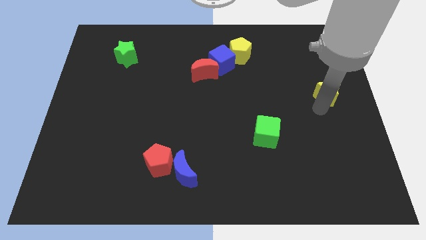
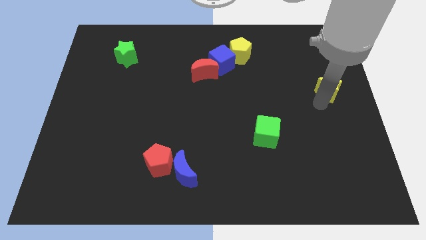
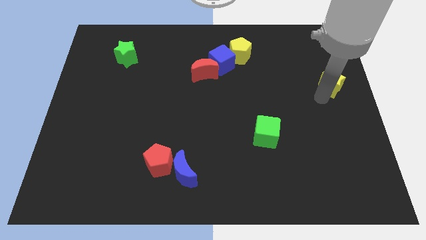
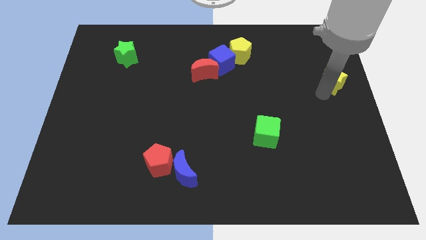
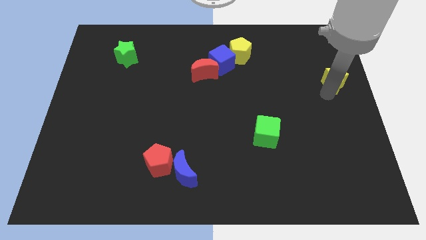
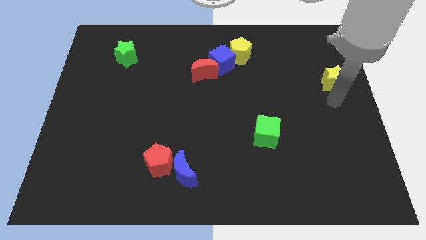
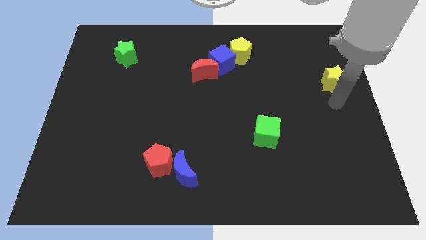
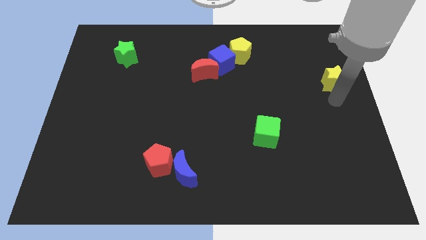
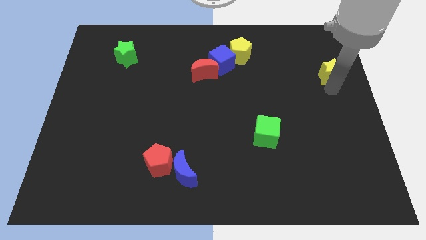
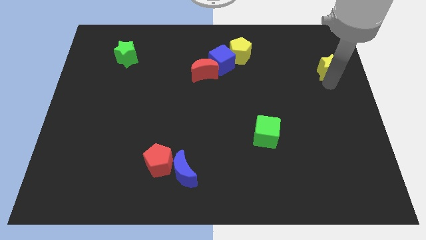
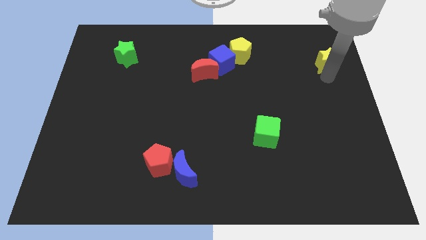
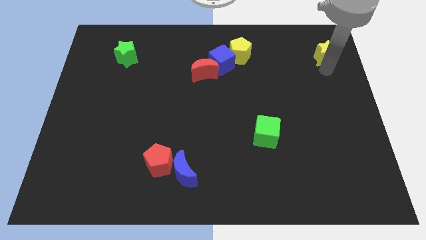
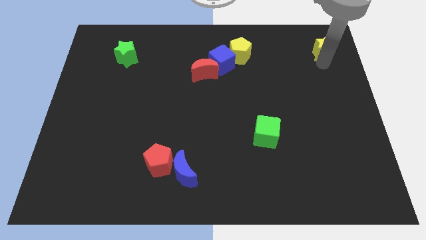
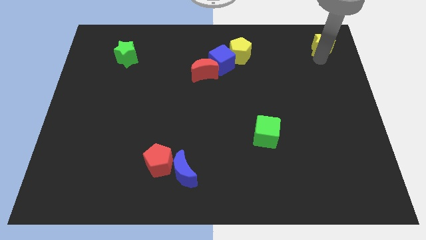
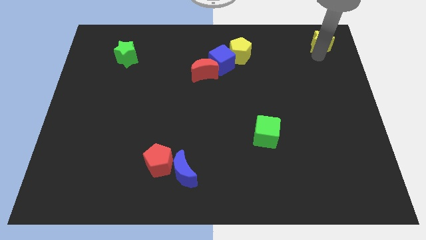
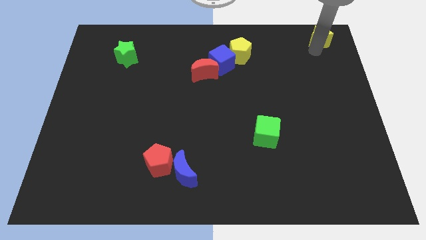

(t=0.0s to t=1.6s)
move the yellow star to the top right side

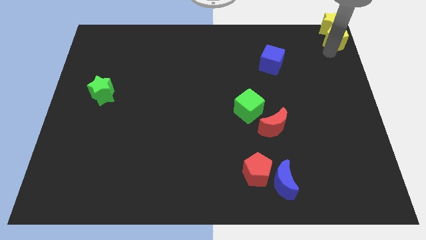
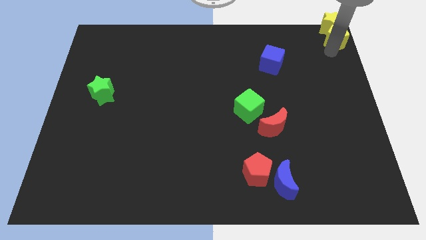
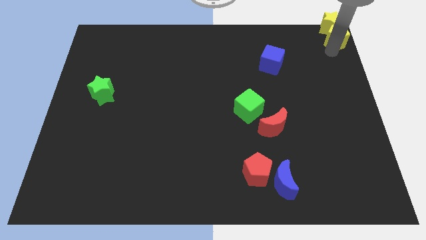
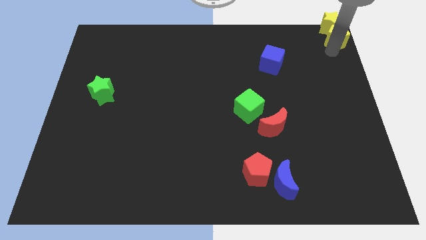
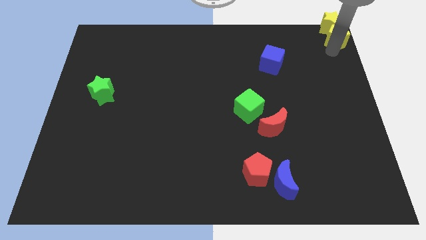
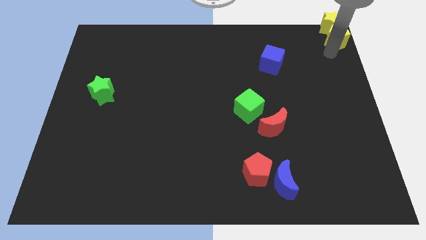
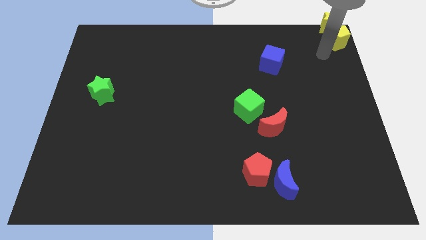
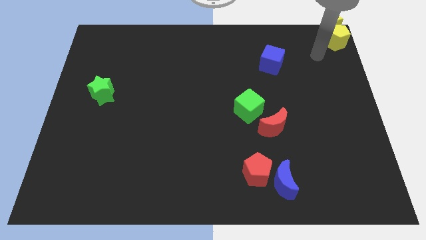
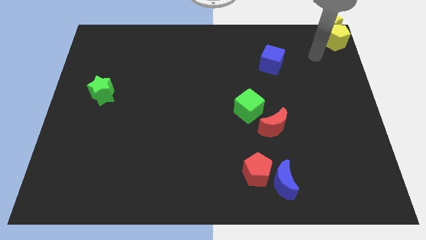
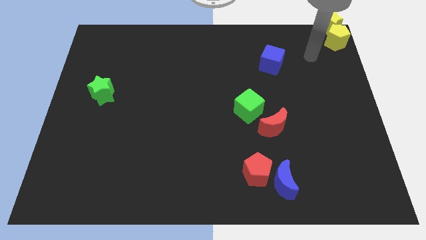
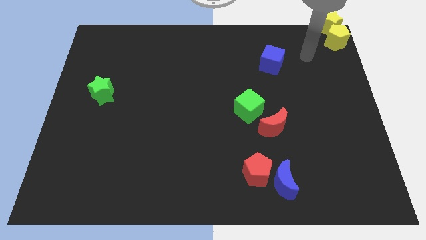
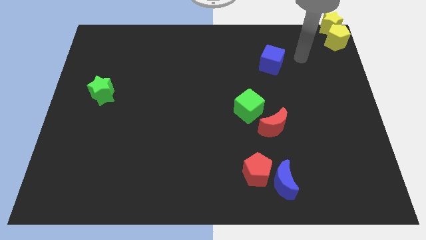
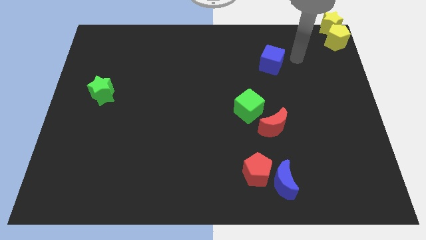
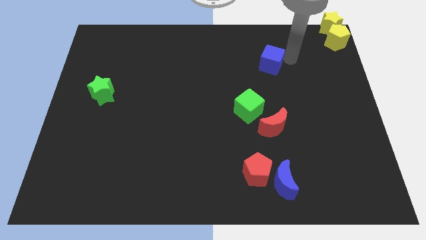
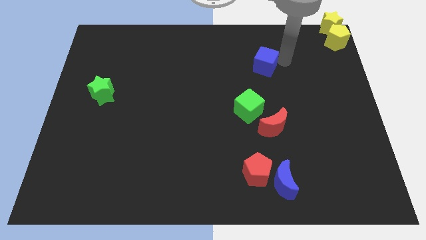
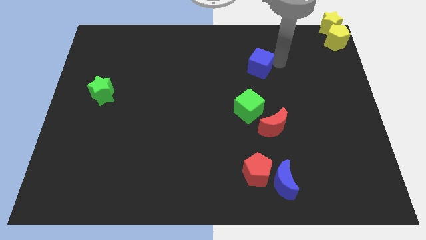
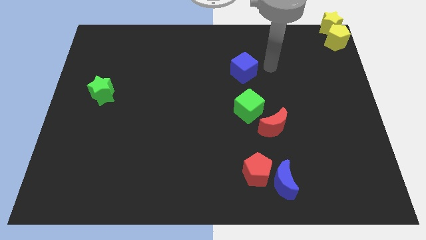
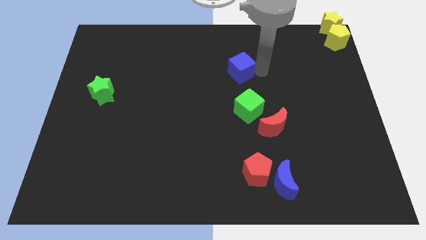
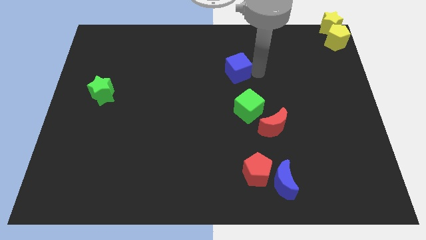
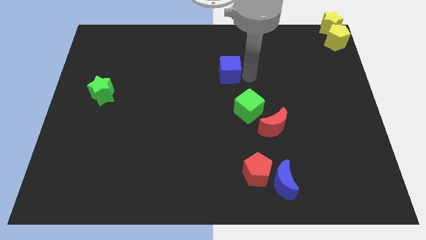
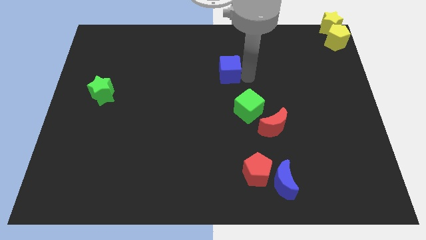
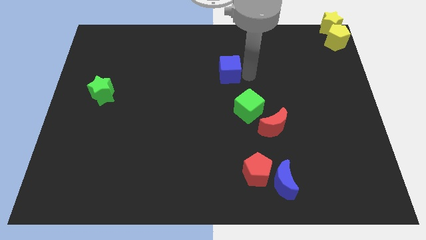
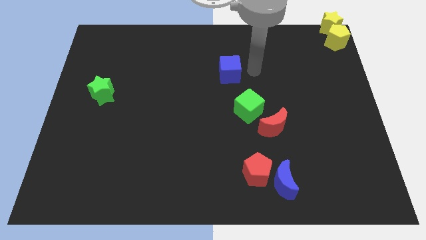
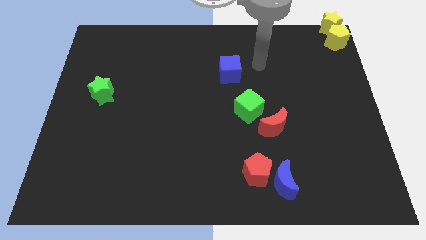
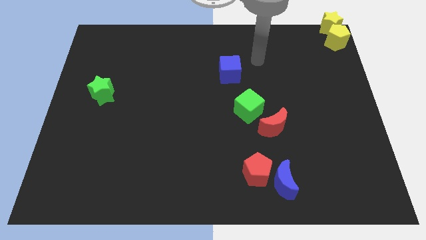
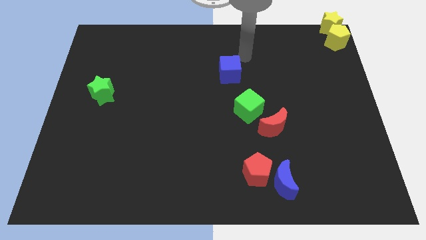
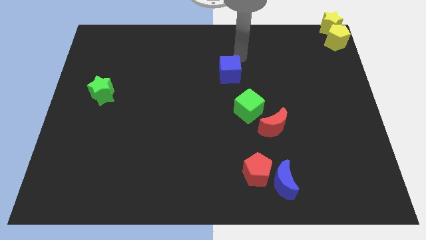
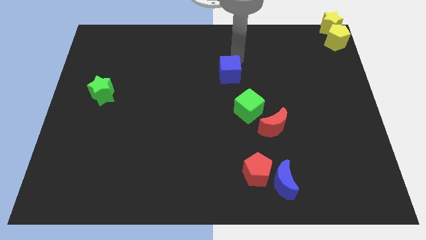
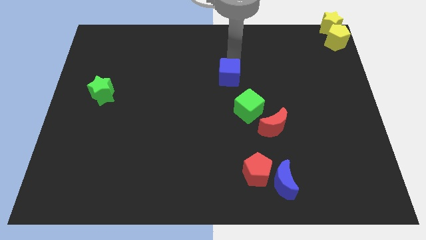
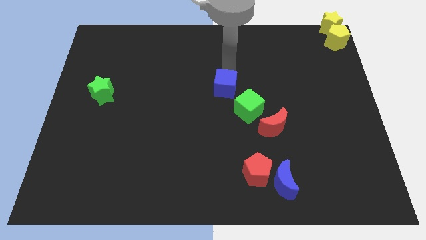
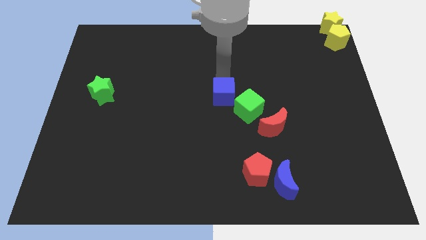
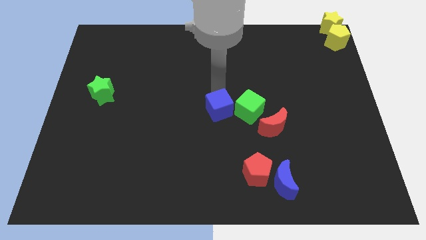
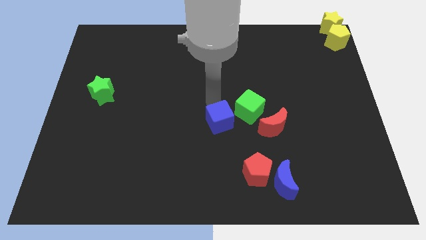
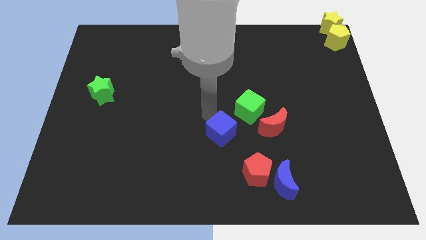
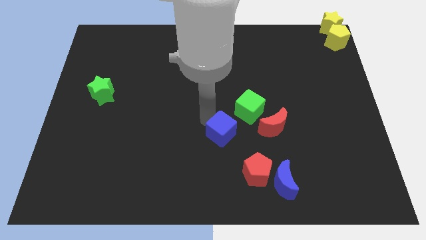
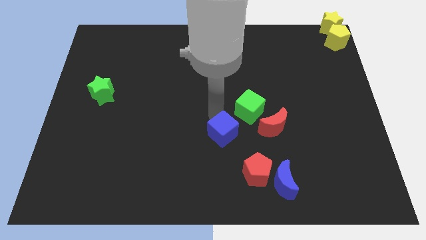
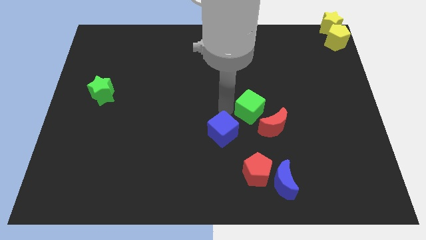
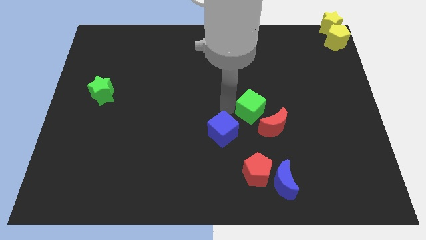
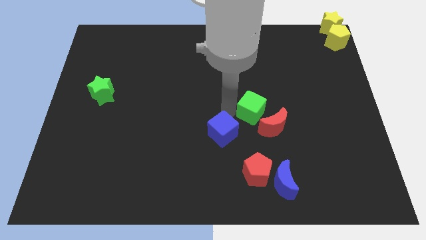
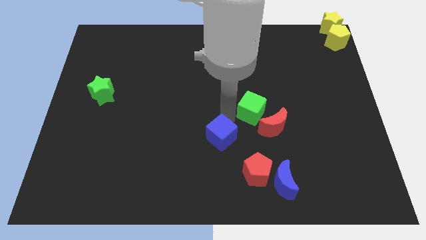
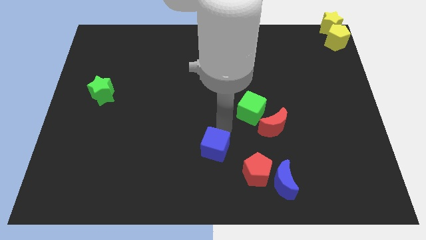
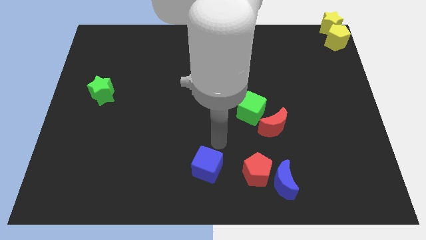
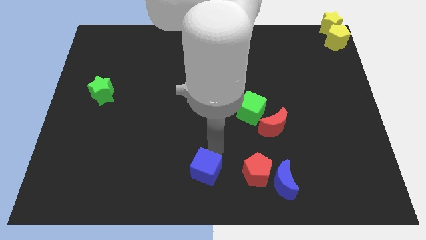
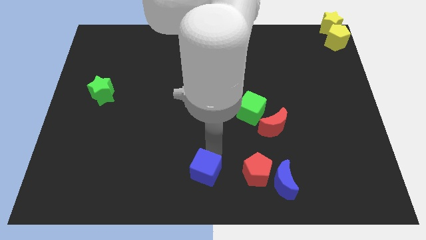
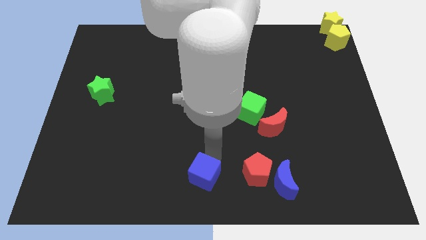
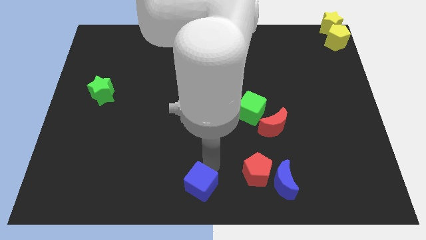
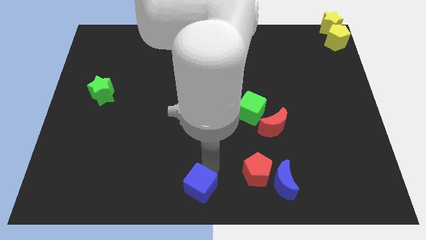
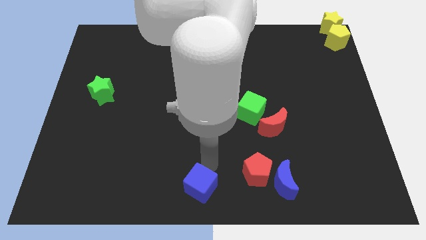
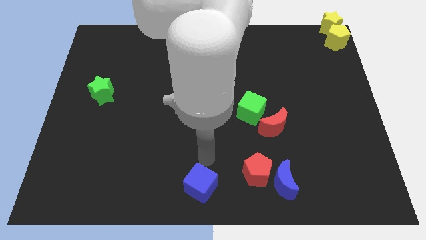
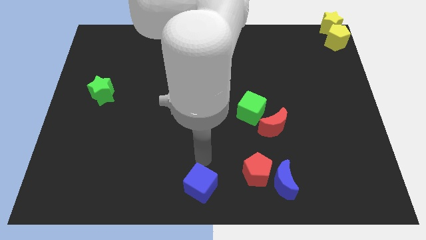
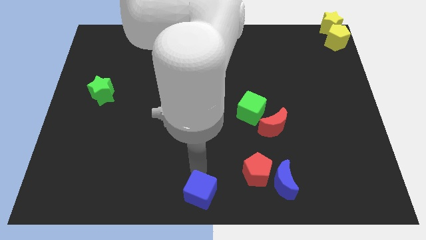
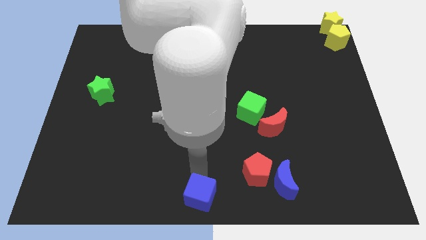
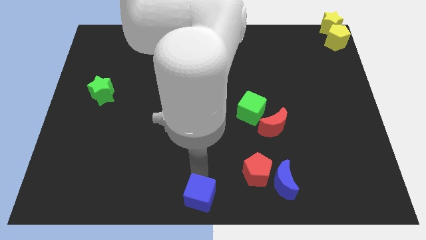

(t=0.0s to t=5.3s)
drag the blue cube towards the bottom center of the board

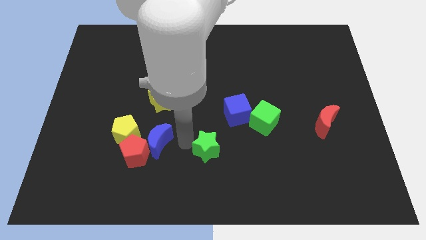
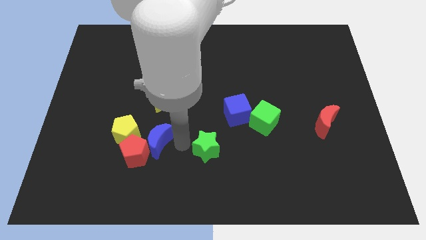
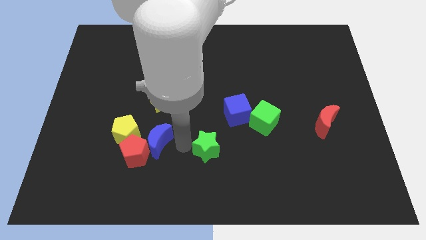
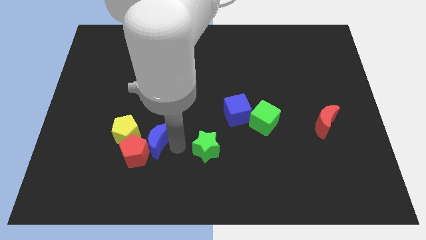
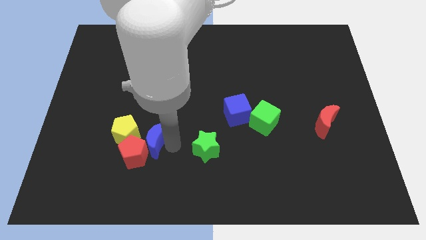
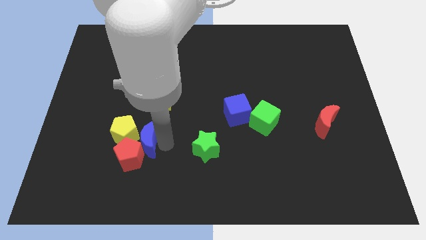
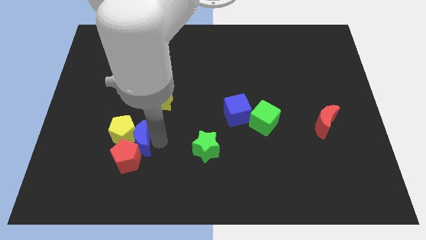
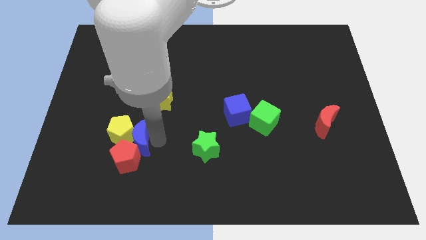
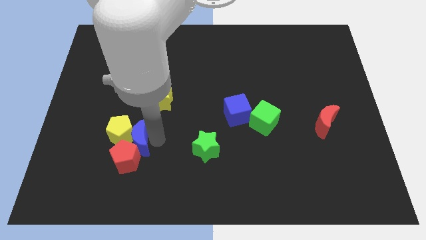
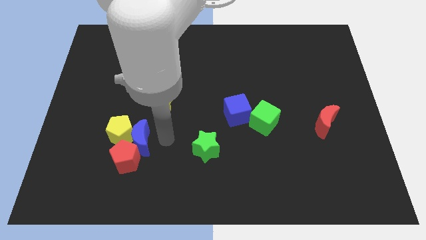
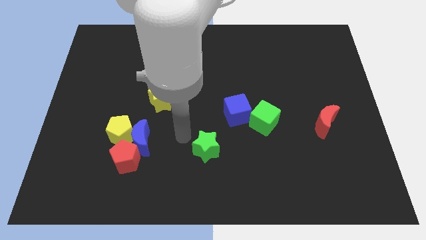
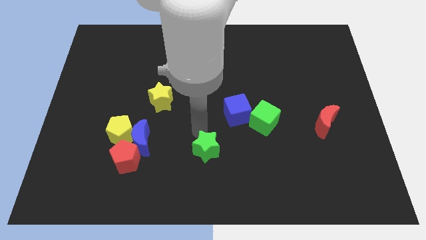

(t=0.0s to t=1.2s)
push blue moon into the red and the yellow pentagon

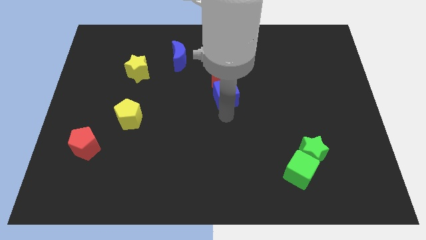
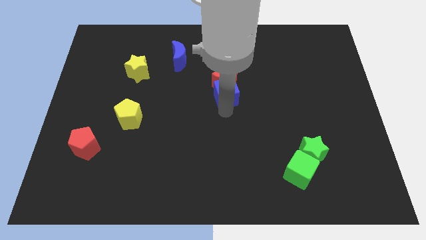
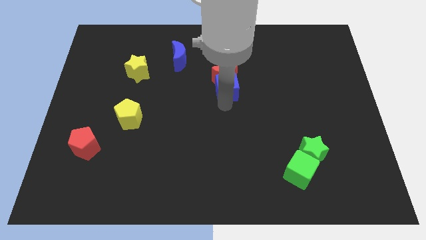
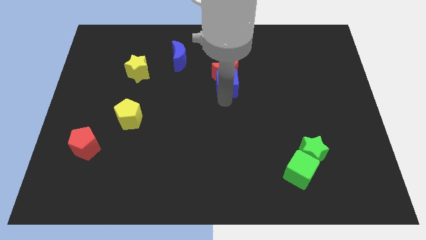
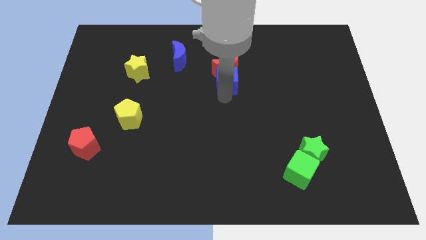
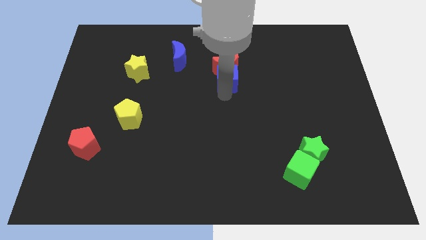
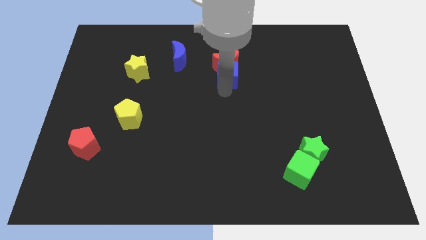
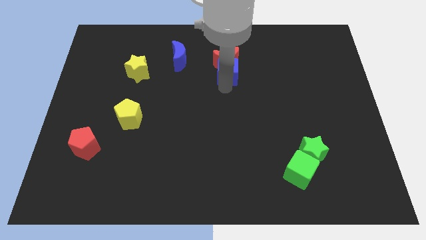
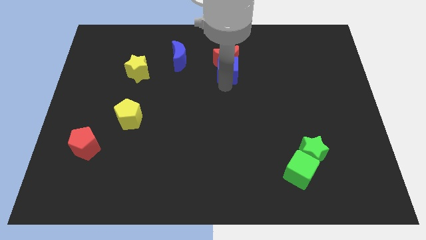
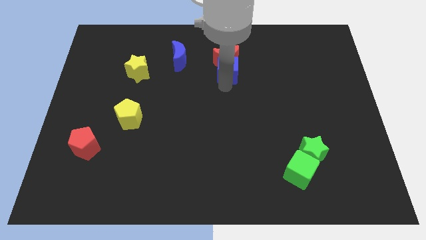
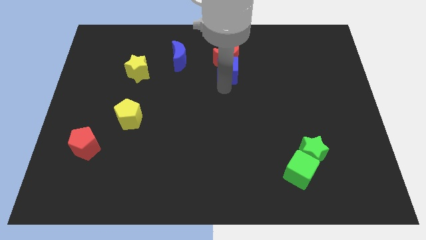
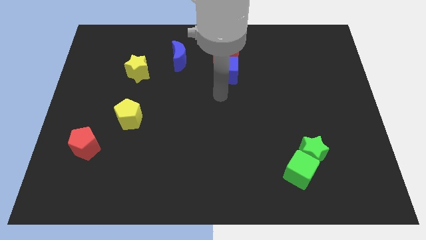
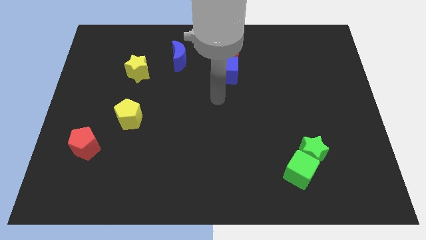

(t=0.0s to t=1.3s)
put the red crescent along with the blue cube to the right of the blue crescent
